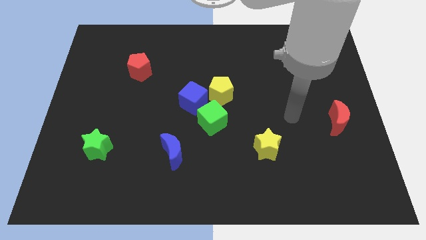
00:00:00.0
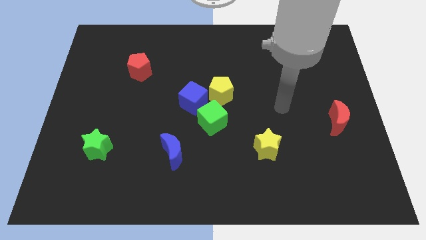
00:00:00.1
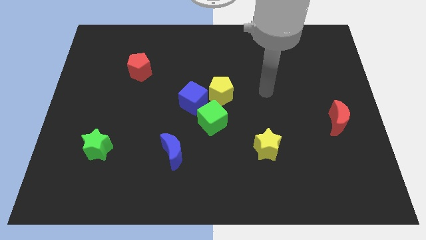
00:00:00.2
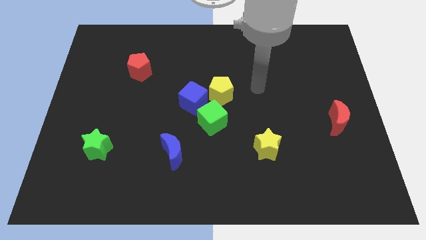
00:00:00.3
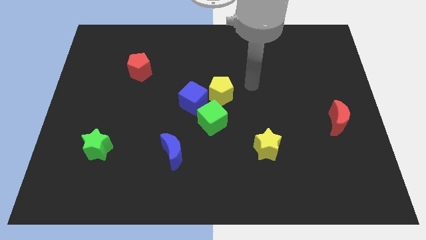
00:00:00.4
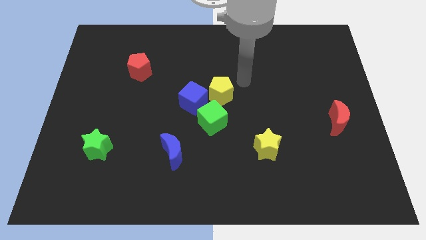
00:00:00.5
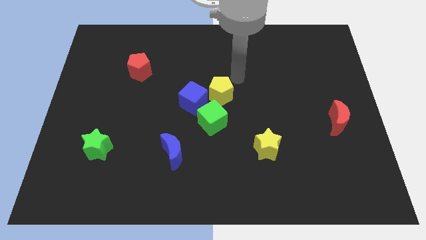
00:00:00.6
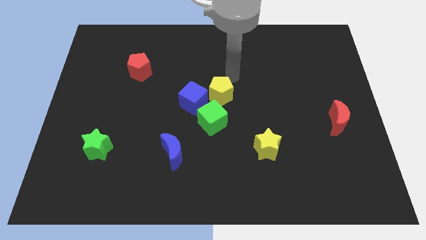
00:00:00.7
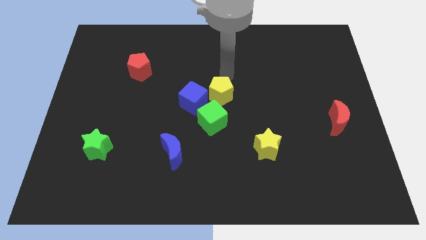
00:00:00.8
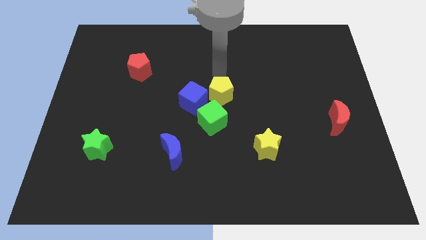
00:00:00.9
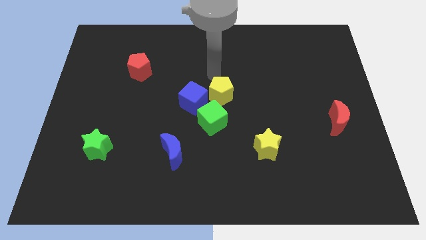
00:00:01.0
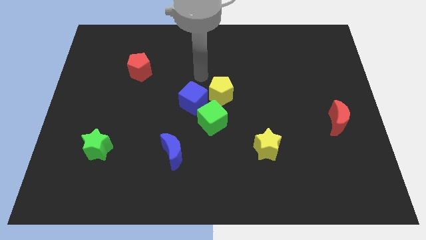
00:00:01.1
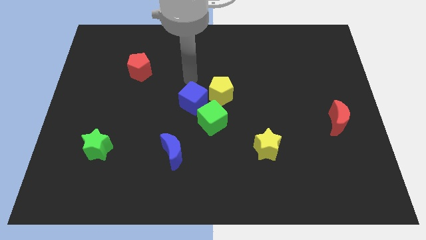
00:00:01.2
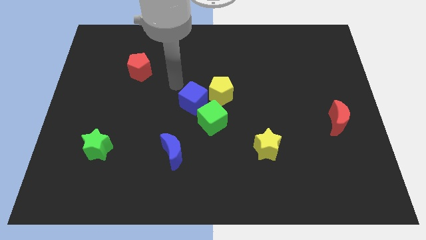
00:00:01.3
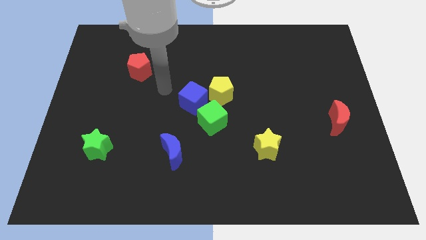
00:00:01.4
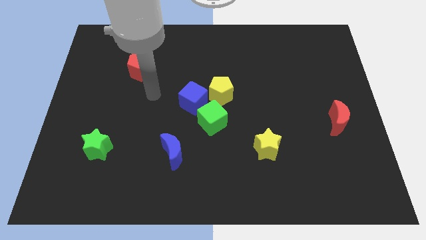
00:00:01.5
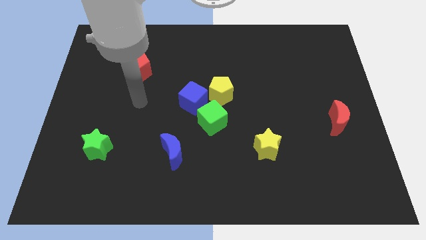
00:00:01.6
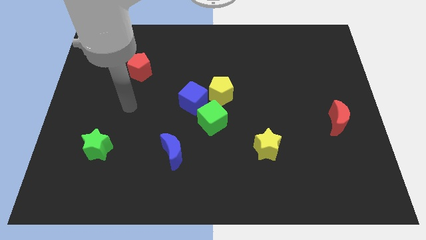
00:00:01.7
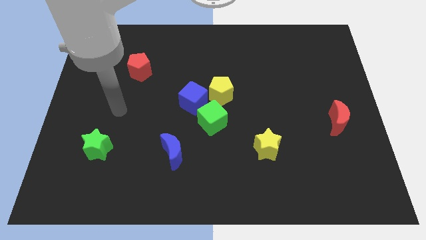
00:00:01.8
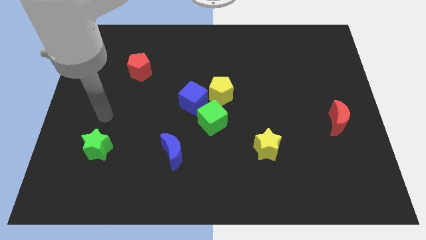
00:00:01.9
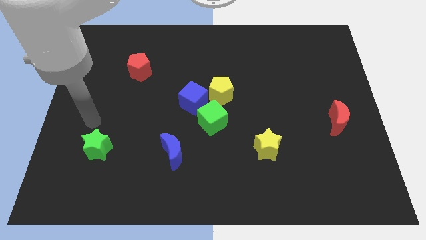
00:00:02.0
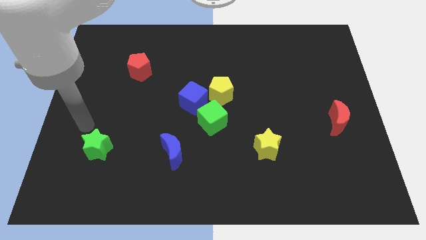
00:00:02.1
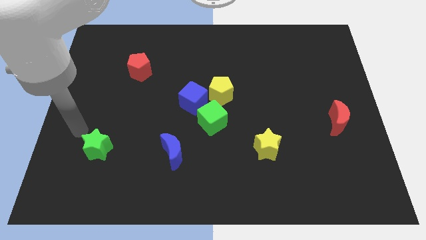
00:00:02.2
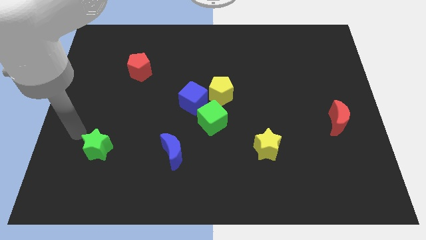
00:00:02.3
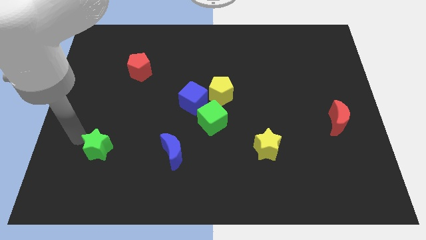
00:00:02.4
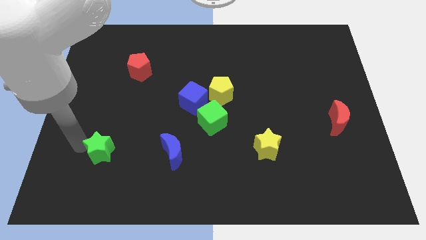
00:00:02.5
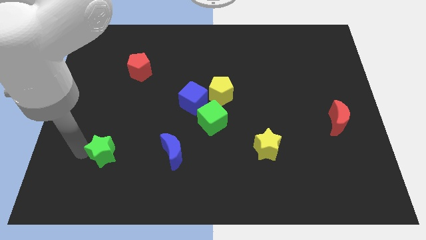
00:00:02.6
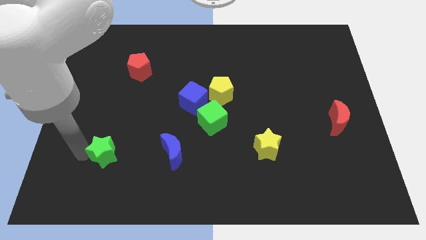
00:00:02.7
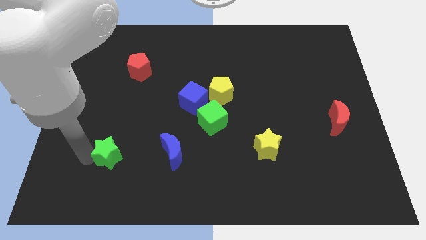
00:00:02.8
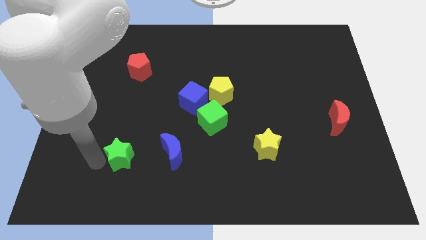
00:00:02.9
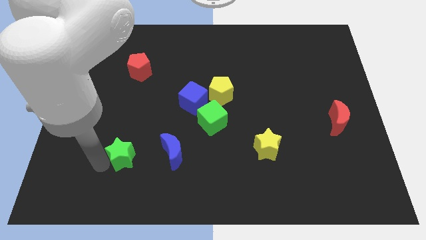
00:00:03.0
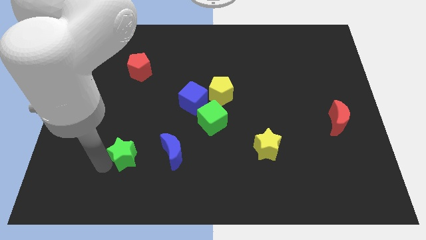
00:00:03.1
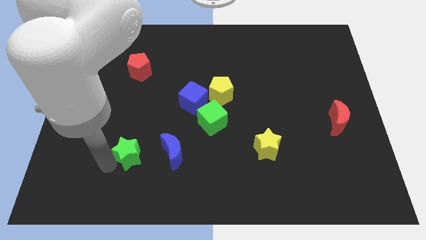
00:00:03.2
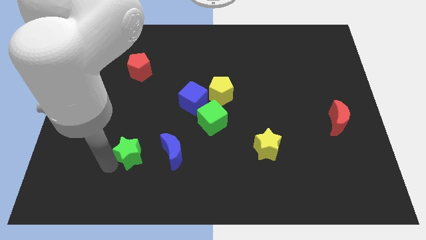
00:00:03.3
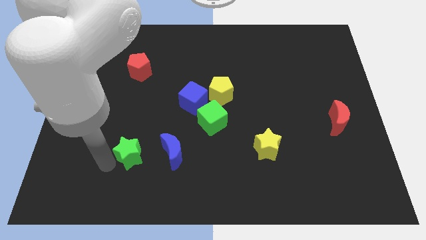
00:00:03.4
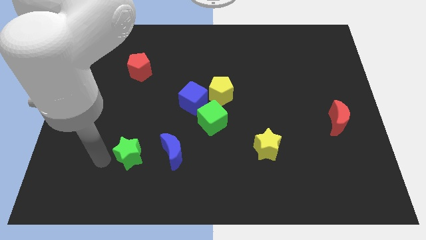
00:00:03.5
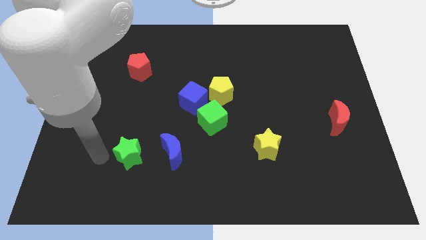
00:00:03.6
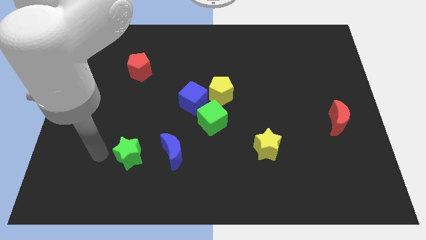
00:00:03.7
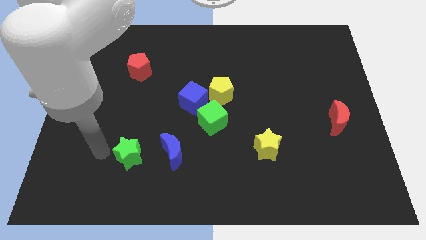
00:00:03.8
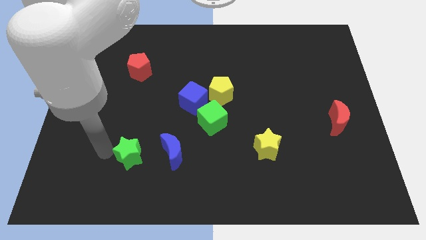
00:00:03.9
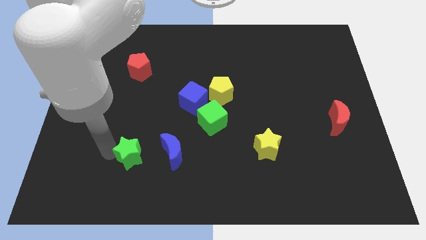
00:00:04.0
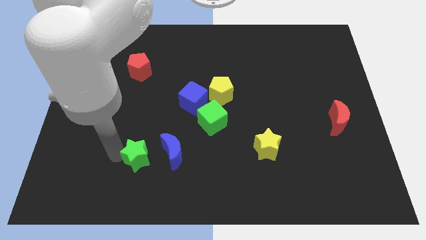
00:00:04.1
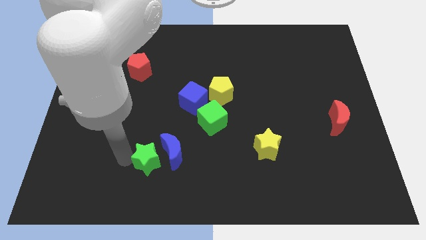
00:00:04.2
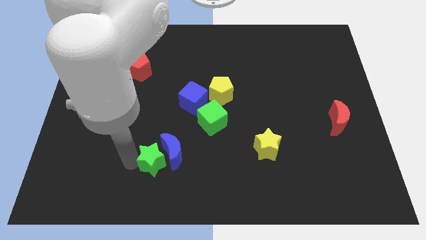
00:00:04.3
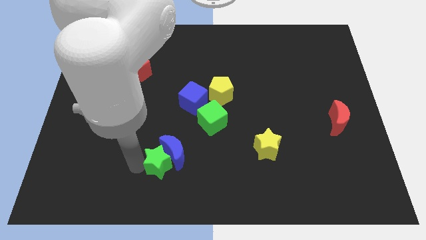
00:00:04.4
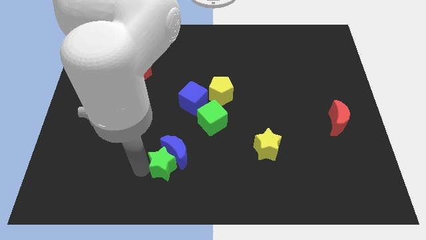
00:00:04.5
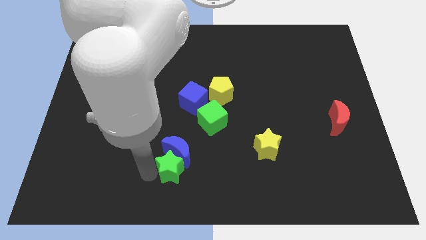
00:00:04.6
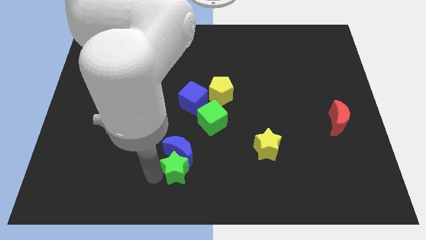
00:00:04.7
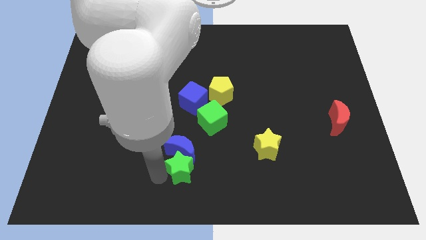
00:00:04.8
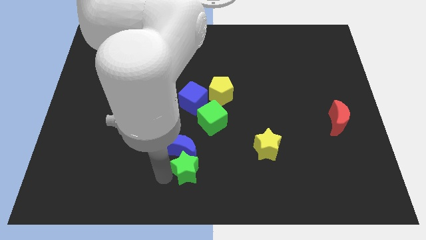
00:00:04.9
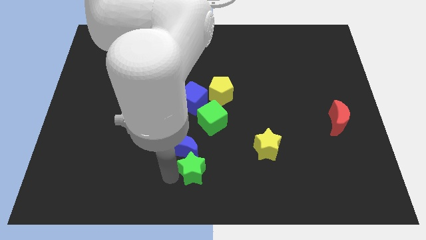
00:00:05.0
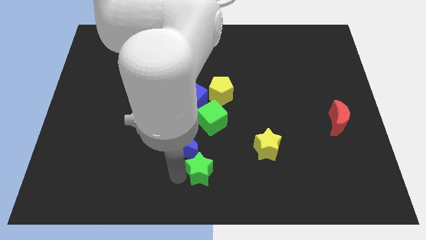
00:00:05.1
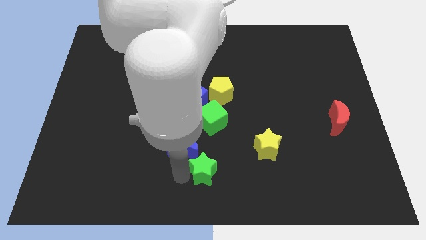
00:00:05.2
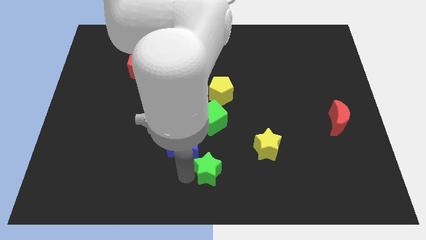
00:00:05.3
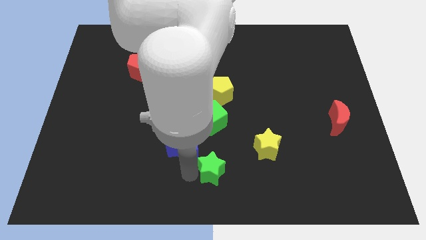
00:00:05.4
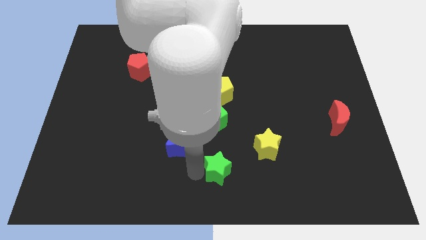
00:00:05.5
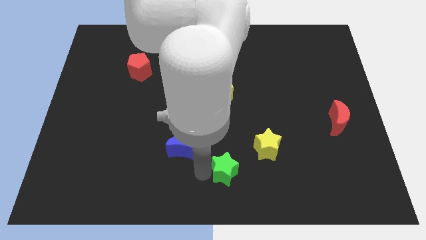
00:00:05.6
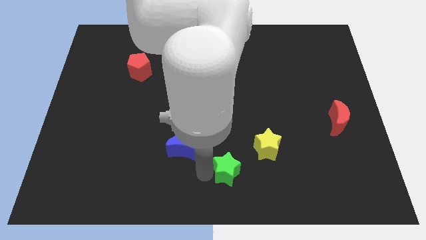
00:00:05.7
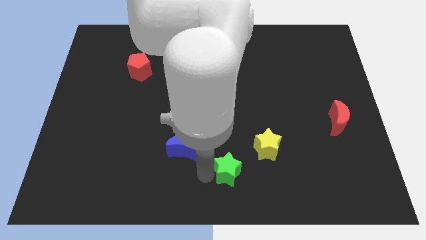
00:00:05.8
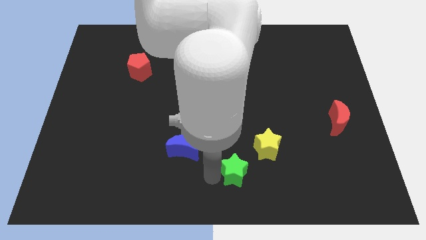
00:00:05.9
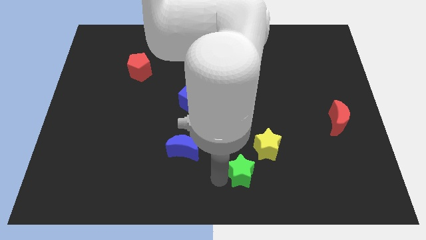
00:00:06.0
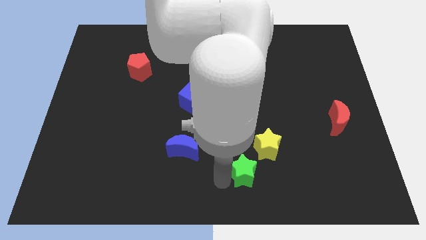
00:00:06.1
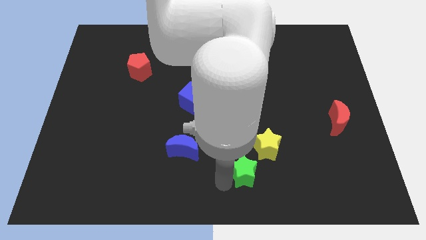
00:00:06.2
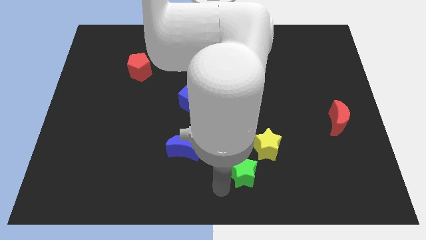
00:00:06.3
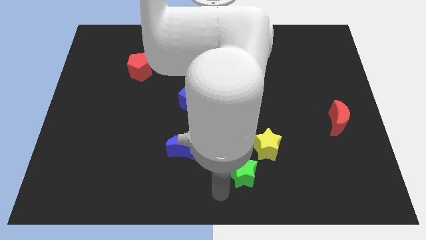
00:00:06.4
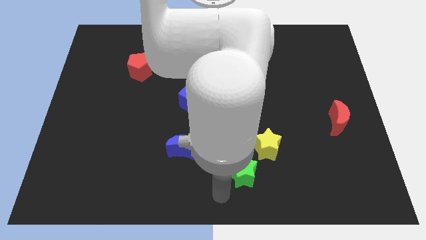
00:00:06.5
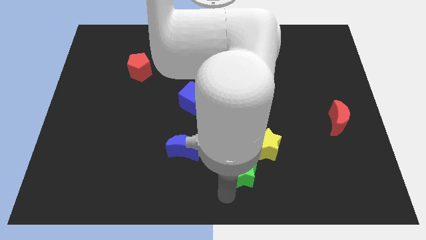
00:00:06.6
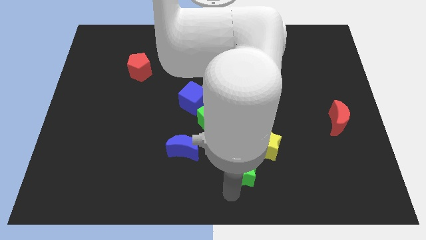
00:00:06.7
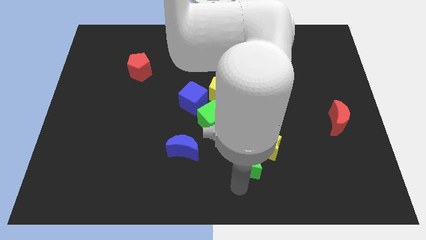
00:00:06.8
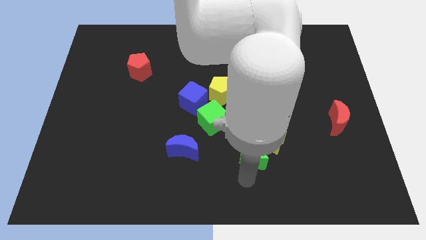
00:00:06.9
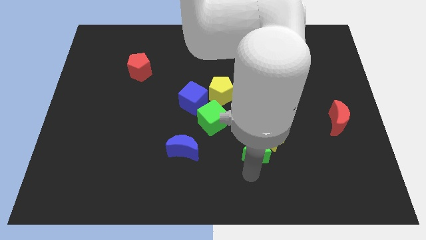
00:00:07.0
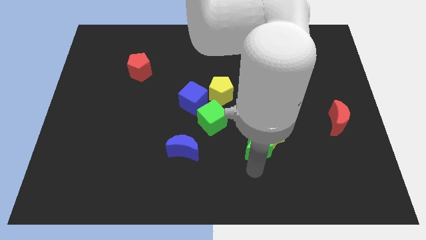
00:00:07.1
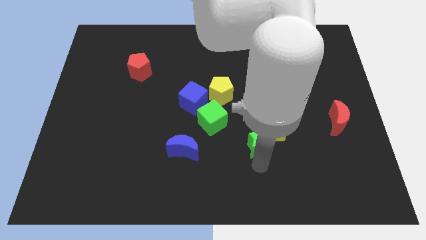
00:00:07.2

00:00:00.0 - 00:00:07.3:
push the green star towards the yellow star

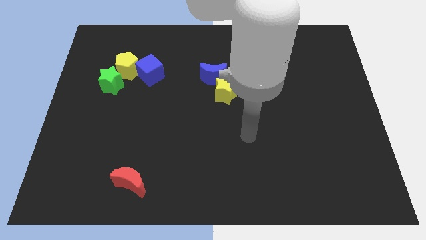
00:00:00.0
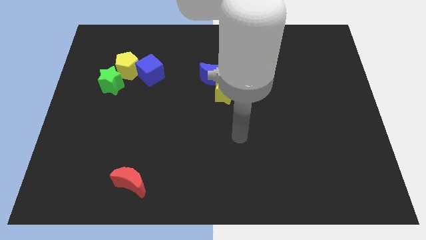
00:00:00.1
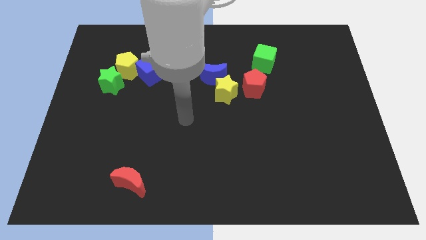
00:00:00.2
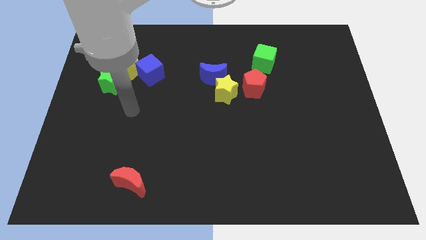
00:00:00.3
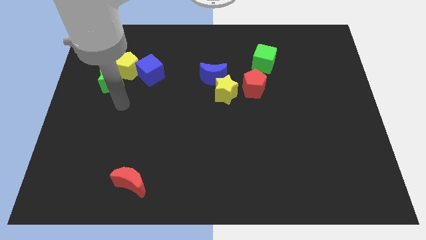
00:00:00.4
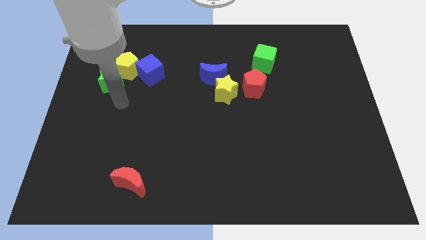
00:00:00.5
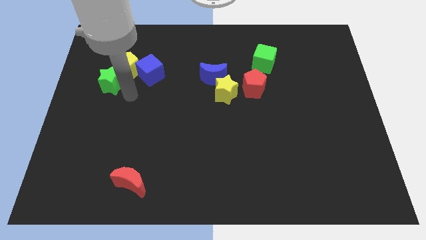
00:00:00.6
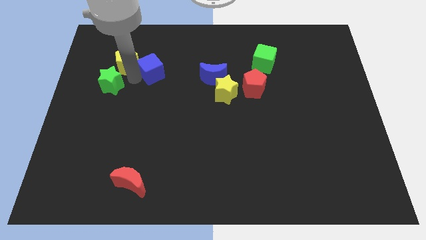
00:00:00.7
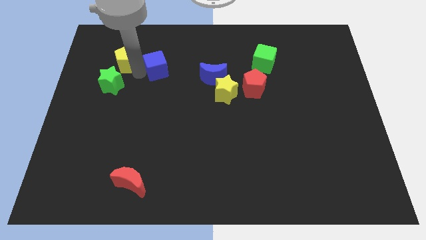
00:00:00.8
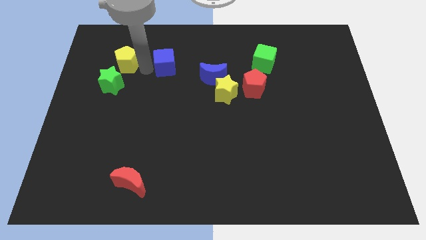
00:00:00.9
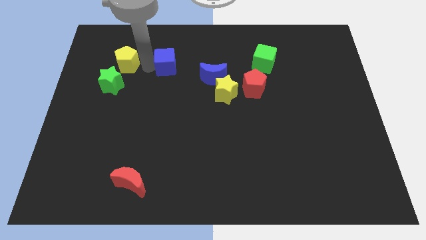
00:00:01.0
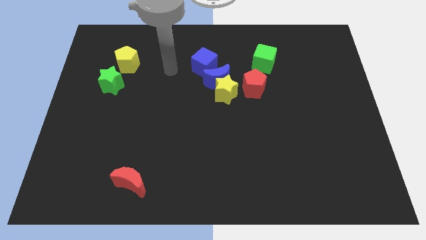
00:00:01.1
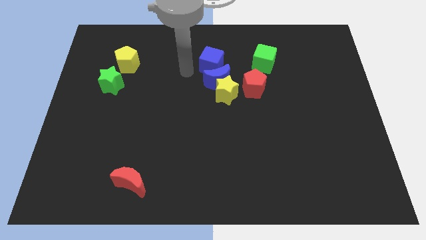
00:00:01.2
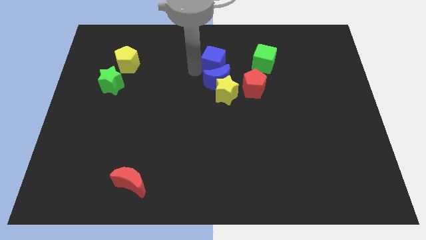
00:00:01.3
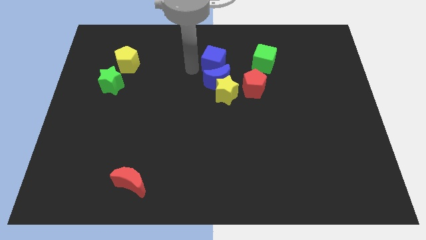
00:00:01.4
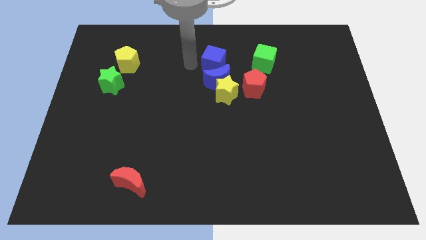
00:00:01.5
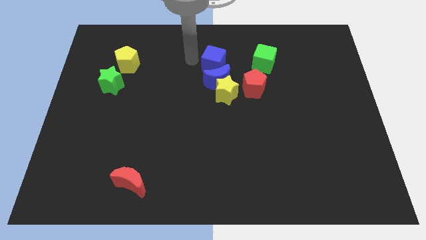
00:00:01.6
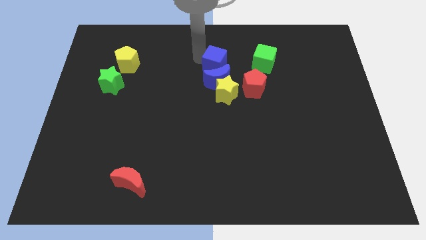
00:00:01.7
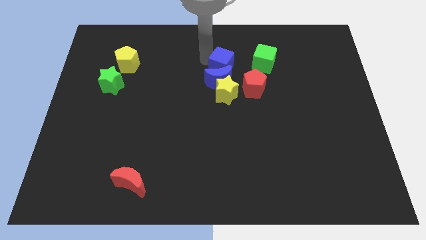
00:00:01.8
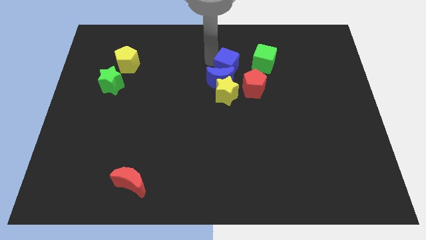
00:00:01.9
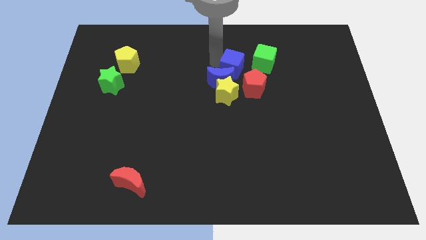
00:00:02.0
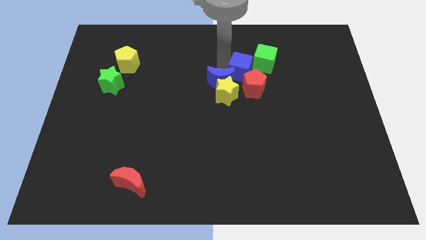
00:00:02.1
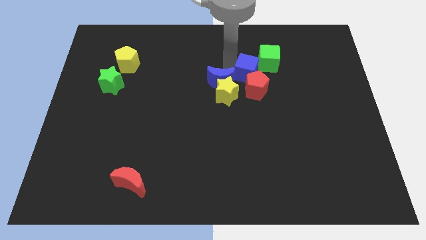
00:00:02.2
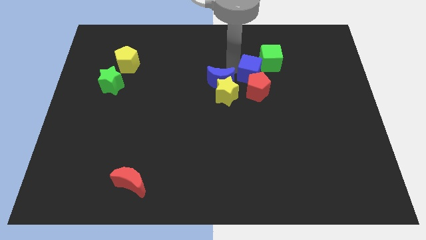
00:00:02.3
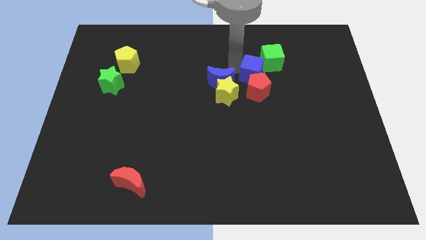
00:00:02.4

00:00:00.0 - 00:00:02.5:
push the blue cube next to the red pentagon
